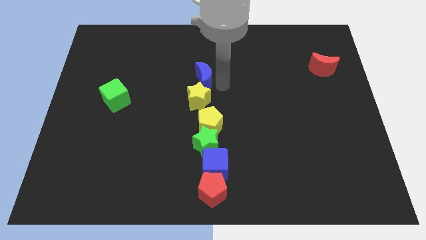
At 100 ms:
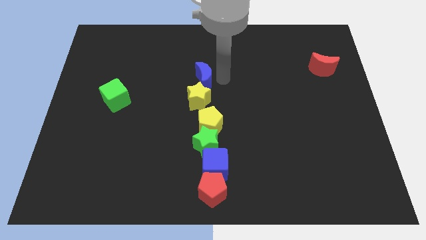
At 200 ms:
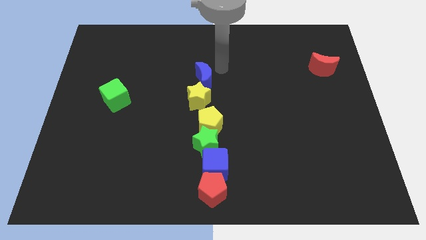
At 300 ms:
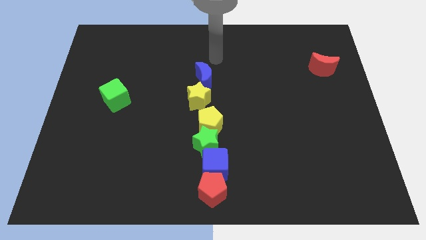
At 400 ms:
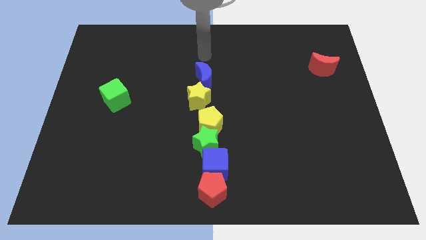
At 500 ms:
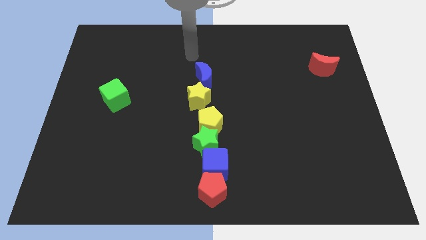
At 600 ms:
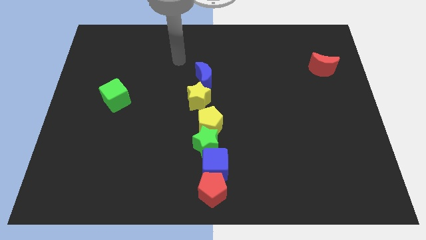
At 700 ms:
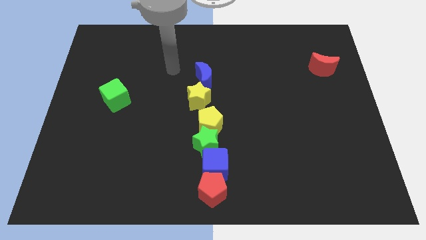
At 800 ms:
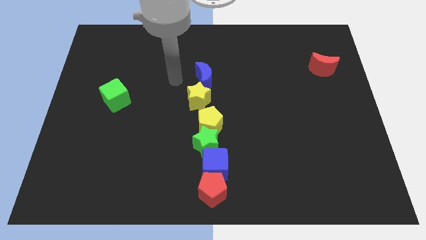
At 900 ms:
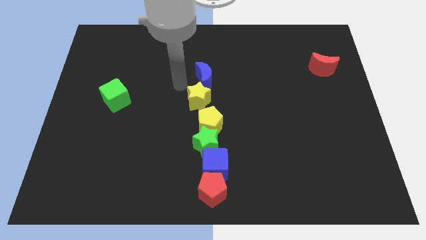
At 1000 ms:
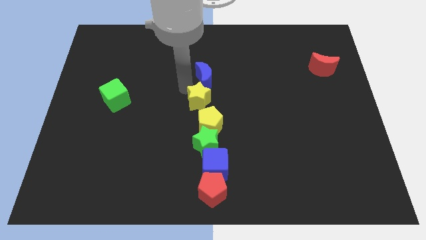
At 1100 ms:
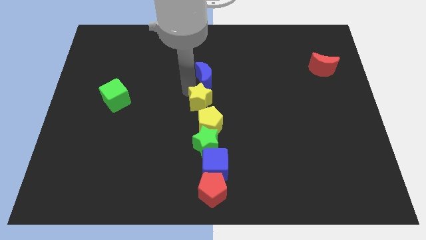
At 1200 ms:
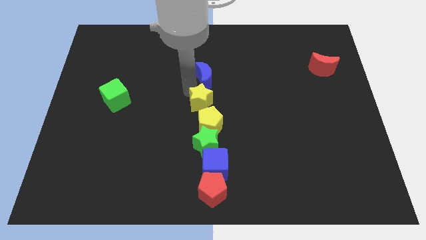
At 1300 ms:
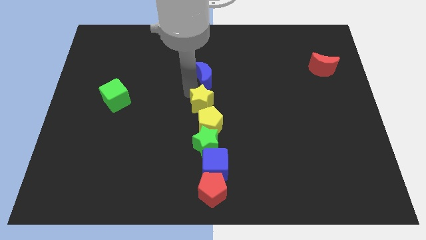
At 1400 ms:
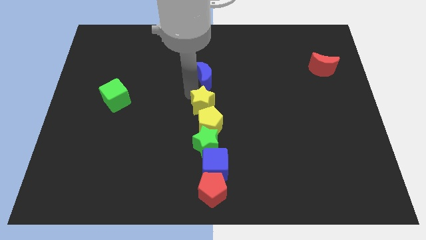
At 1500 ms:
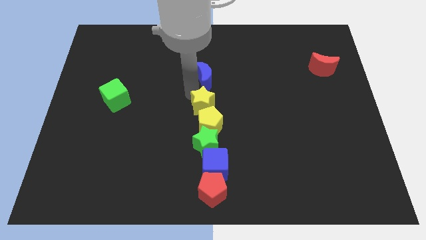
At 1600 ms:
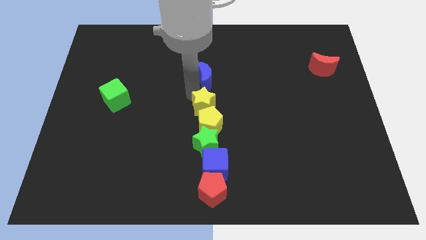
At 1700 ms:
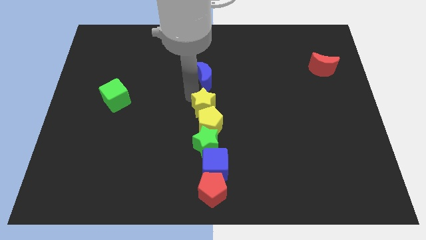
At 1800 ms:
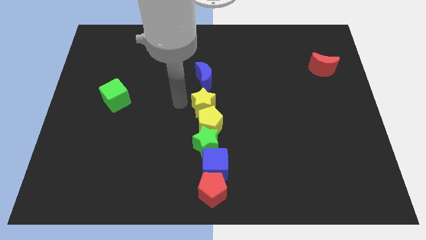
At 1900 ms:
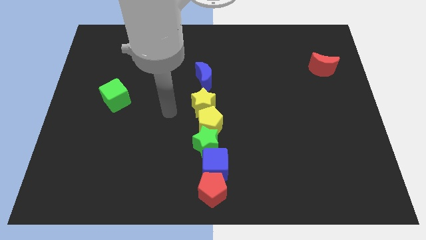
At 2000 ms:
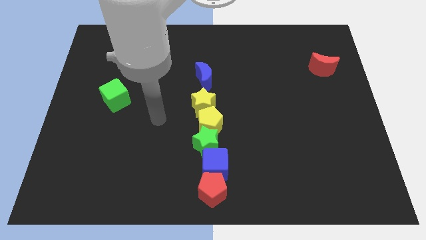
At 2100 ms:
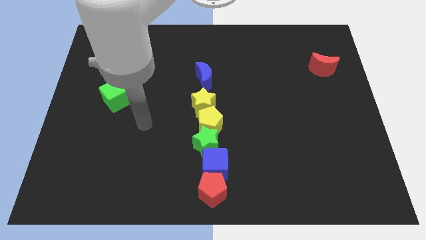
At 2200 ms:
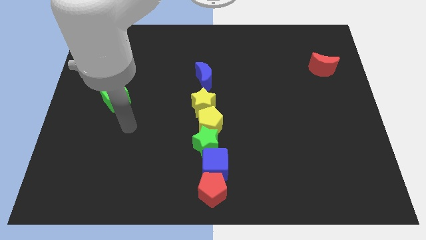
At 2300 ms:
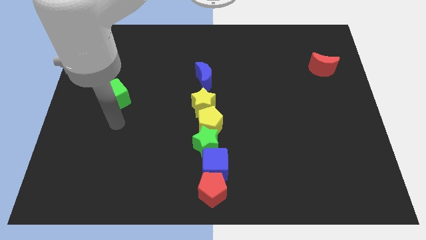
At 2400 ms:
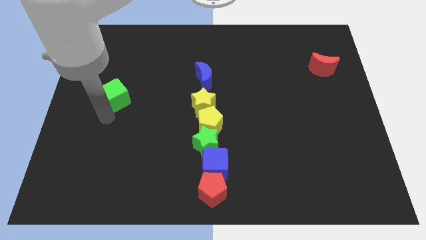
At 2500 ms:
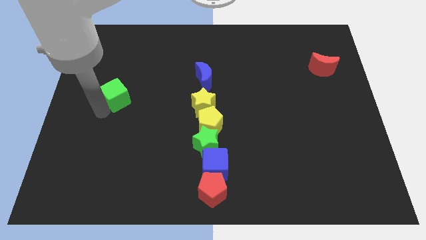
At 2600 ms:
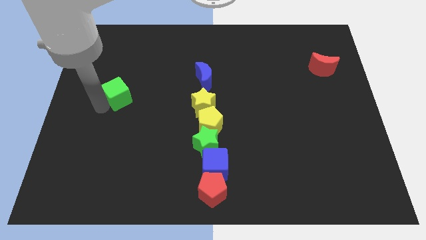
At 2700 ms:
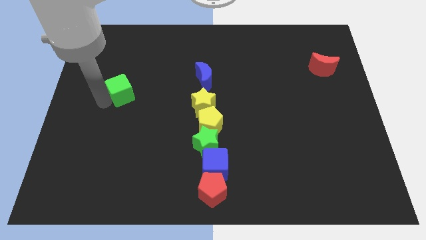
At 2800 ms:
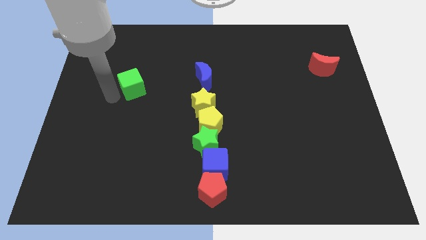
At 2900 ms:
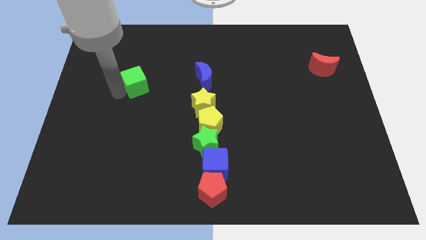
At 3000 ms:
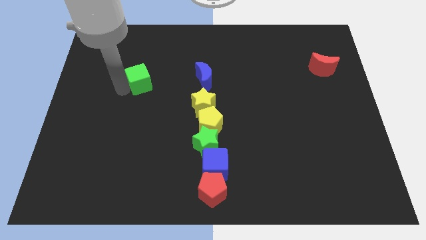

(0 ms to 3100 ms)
move the yellow star and green cube diagonal to each other

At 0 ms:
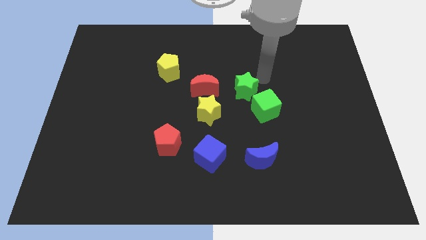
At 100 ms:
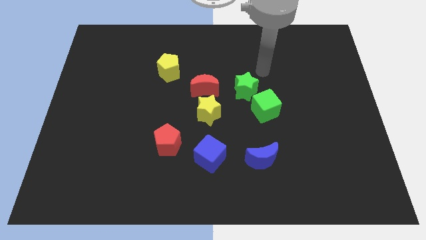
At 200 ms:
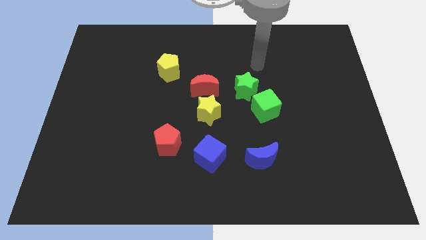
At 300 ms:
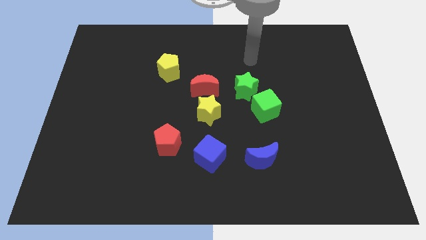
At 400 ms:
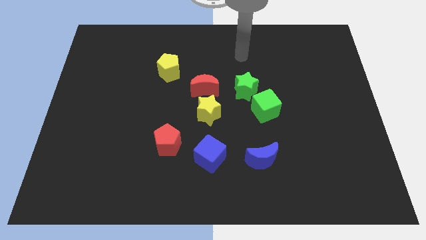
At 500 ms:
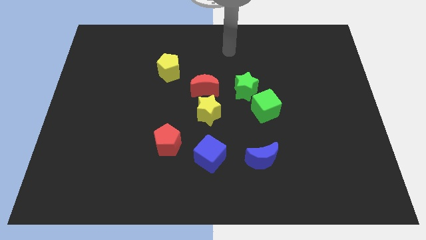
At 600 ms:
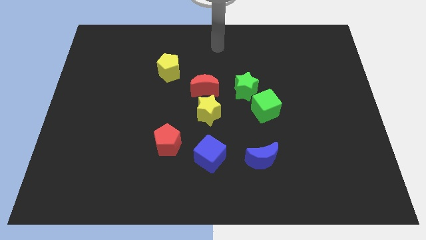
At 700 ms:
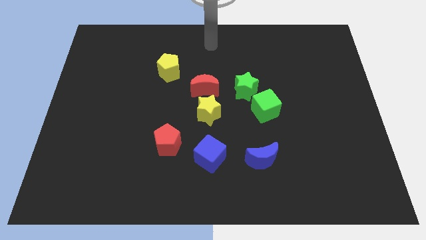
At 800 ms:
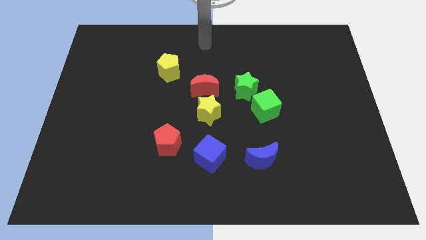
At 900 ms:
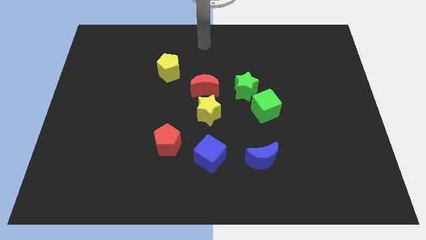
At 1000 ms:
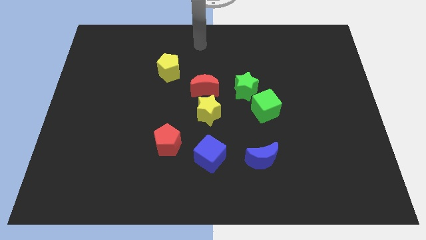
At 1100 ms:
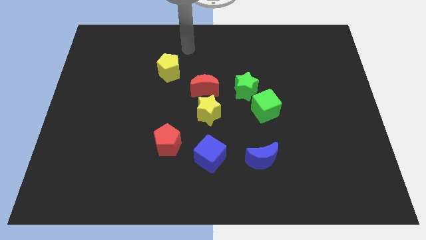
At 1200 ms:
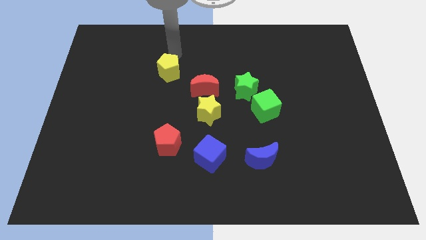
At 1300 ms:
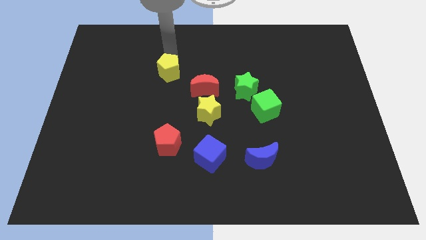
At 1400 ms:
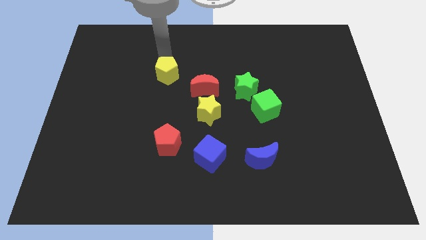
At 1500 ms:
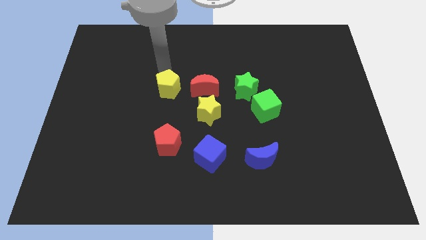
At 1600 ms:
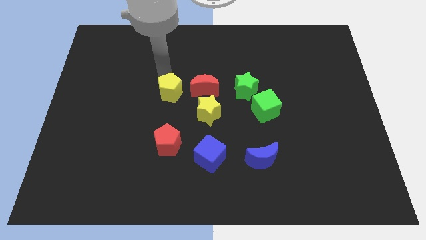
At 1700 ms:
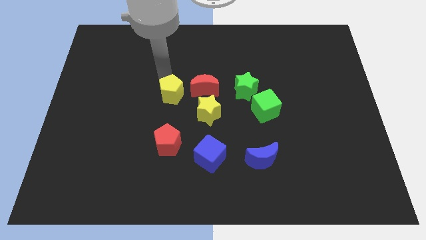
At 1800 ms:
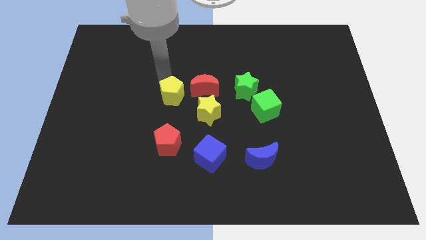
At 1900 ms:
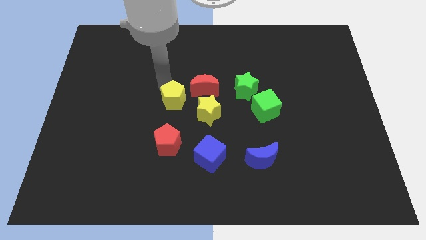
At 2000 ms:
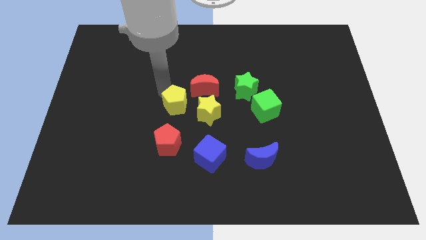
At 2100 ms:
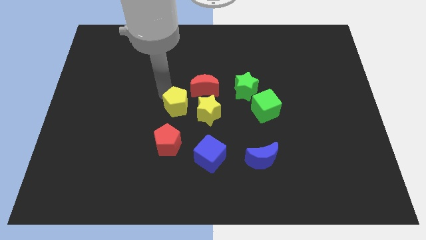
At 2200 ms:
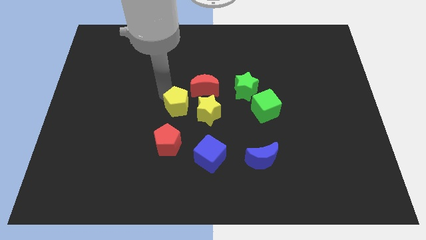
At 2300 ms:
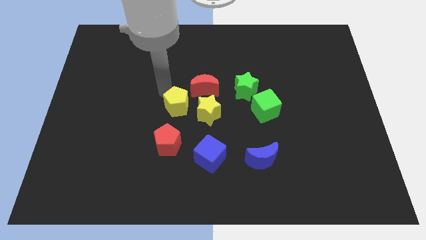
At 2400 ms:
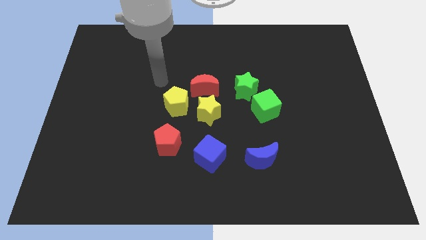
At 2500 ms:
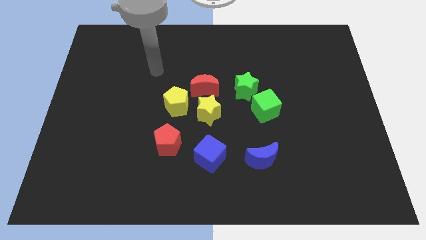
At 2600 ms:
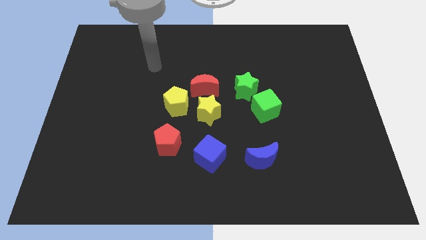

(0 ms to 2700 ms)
move the yellow pentagon to the bottom left of the red crescent

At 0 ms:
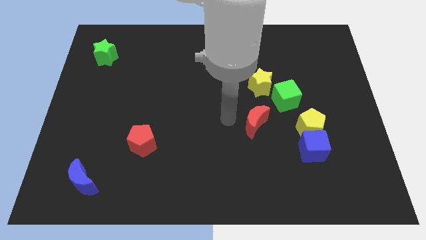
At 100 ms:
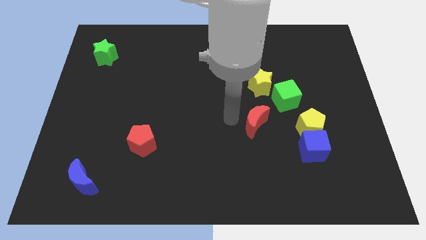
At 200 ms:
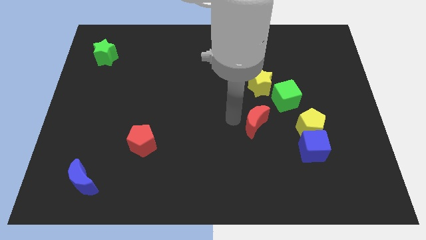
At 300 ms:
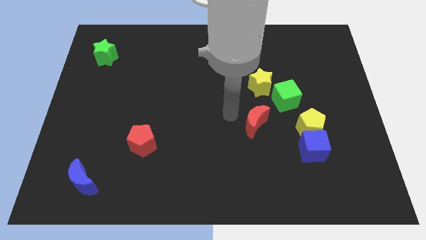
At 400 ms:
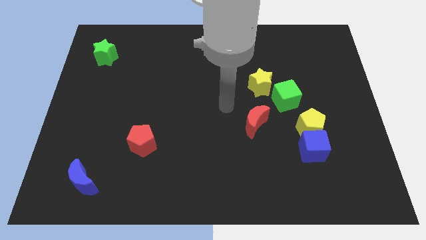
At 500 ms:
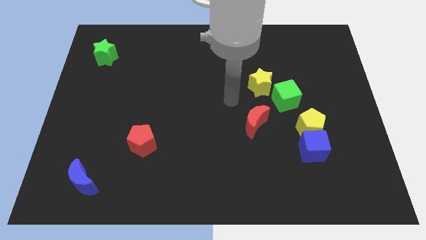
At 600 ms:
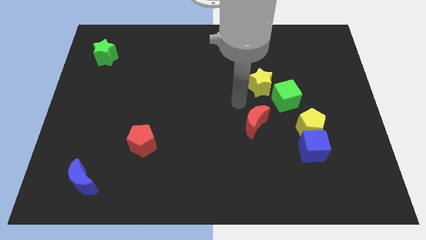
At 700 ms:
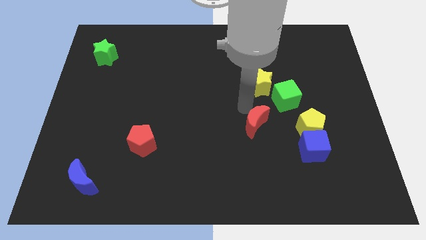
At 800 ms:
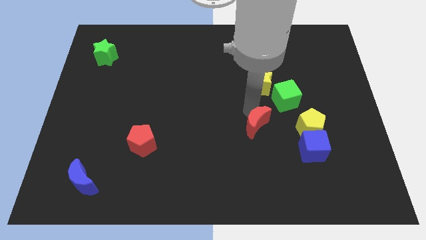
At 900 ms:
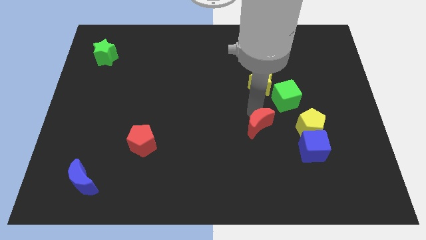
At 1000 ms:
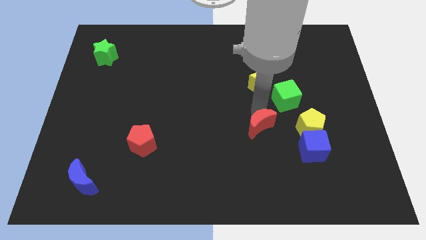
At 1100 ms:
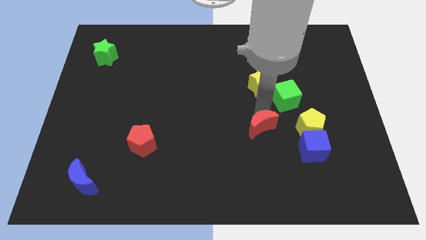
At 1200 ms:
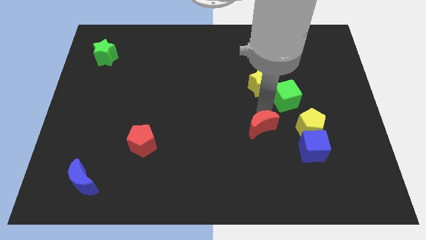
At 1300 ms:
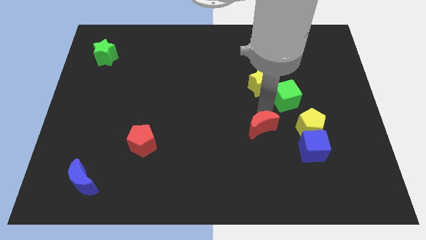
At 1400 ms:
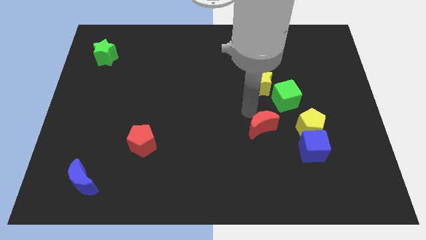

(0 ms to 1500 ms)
place red moon to the left side of the yellow pentagon

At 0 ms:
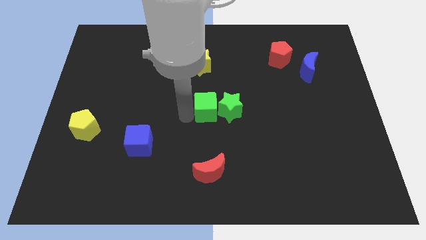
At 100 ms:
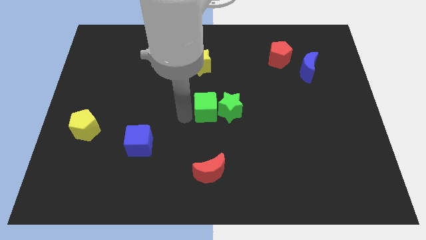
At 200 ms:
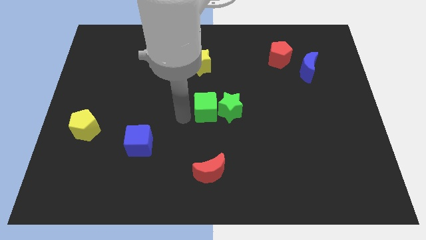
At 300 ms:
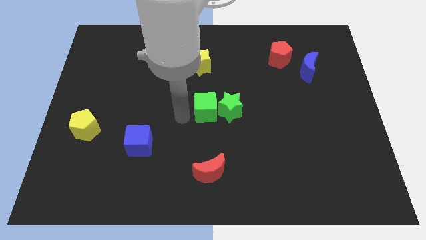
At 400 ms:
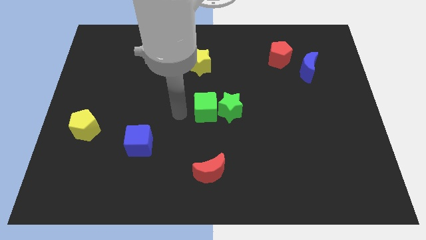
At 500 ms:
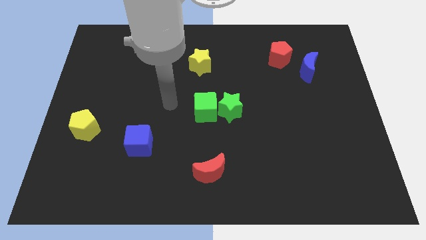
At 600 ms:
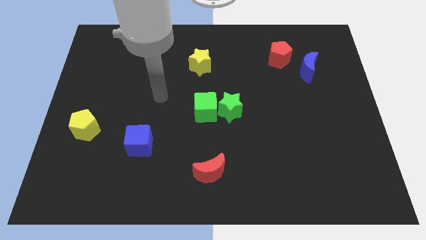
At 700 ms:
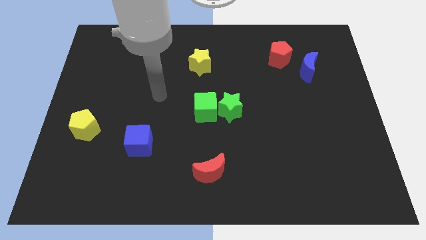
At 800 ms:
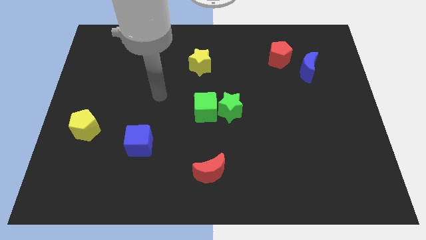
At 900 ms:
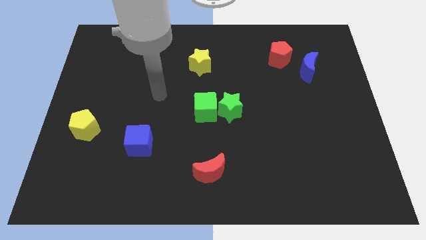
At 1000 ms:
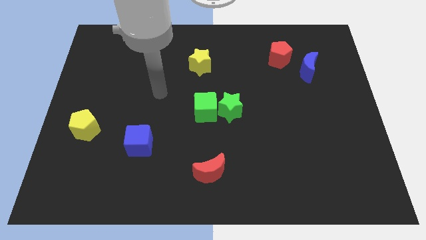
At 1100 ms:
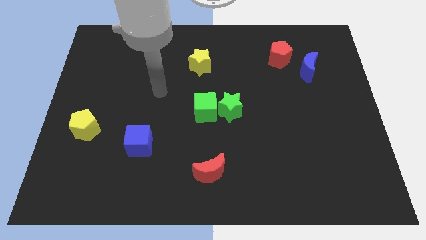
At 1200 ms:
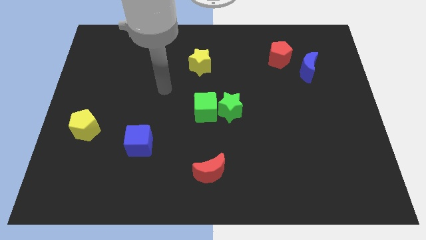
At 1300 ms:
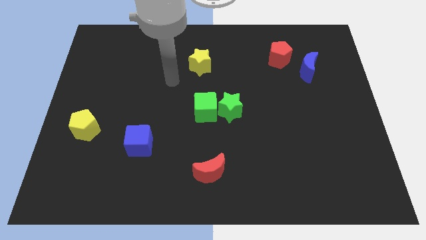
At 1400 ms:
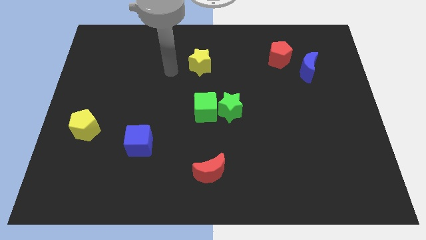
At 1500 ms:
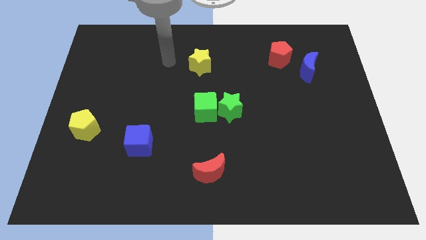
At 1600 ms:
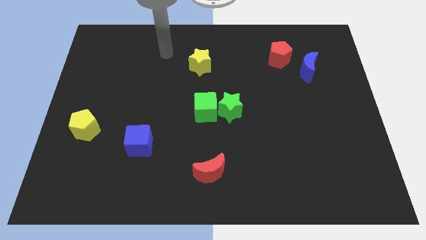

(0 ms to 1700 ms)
move your arm away from the green cube
